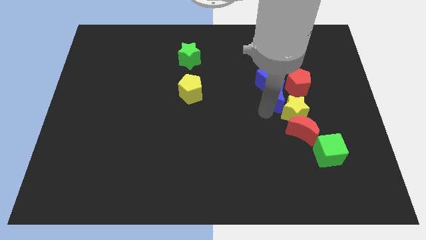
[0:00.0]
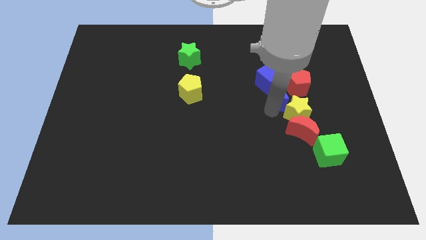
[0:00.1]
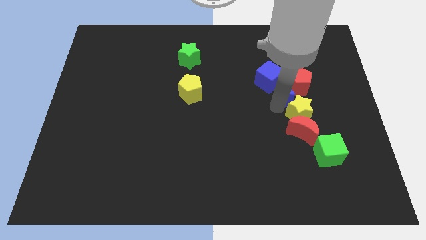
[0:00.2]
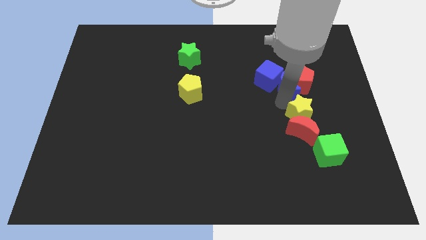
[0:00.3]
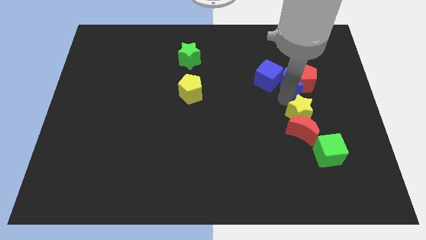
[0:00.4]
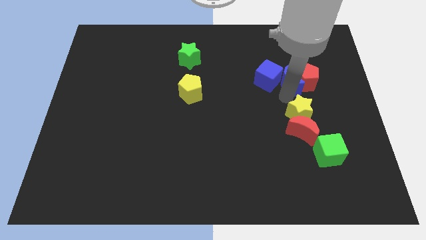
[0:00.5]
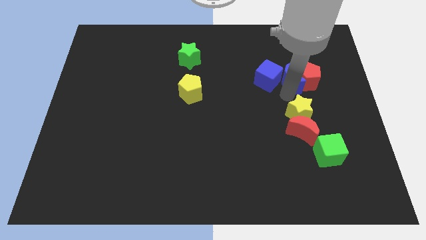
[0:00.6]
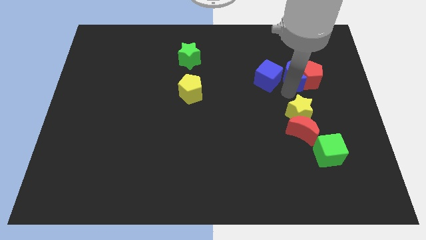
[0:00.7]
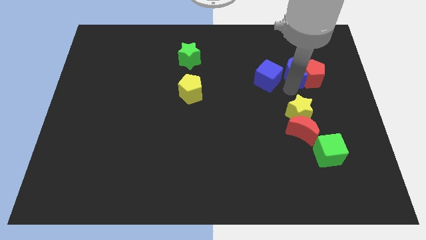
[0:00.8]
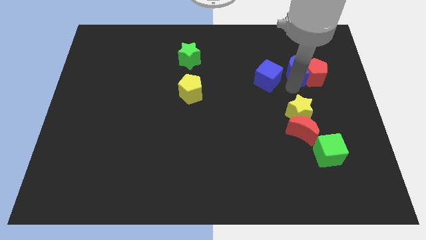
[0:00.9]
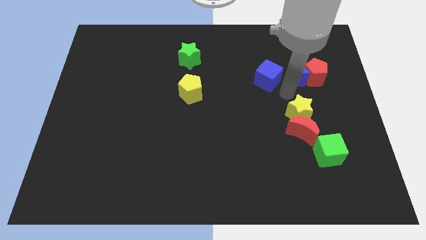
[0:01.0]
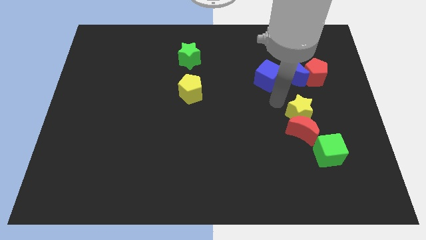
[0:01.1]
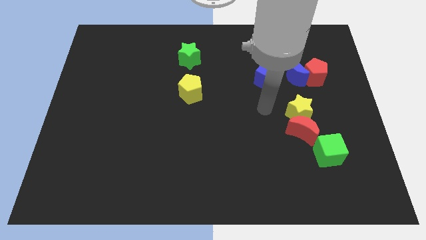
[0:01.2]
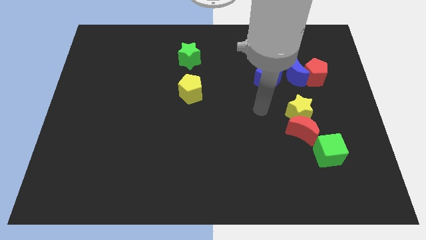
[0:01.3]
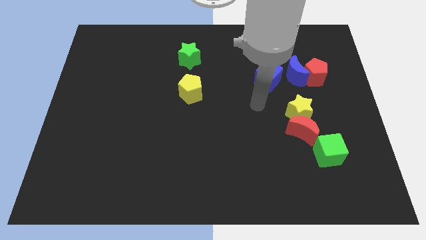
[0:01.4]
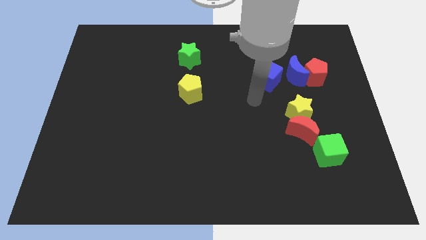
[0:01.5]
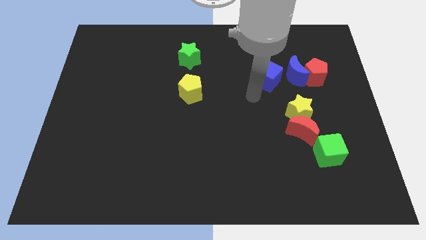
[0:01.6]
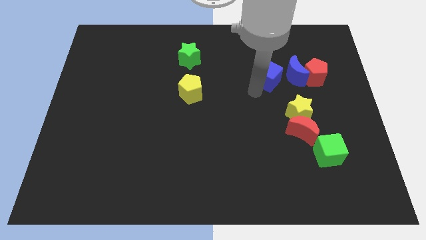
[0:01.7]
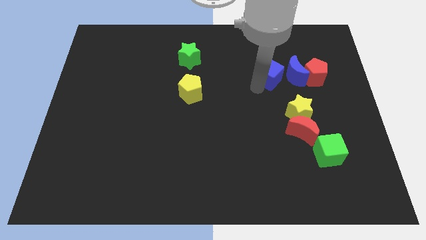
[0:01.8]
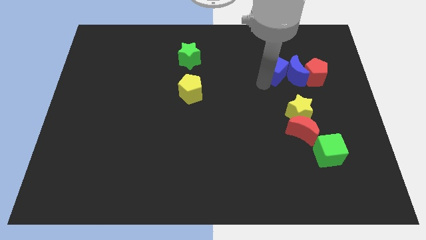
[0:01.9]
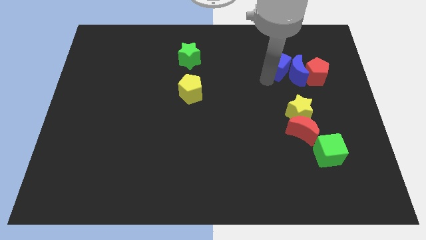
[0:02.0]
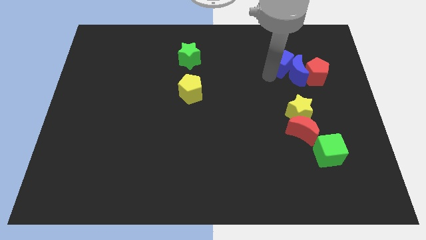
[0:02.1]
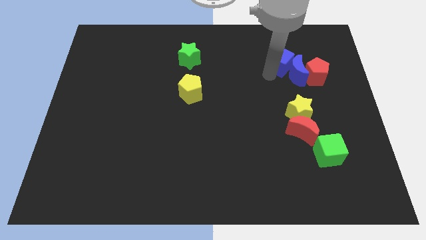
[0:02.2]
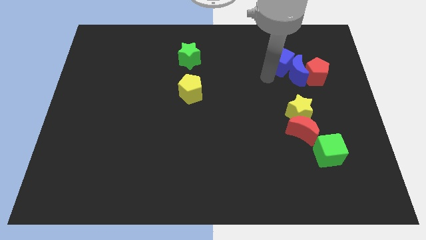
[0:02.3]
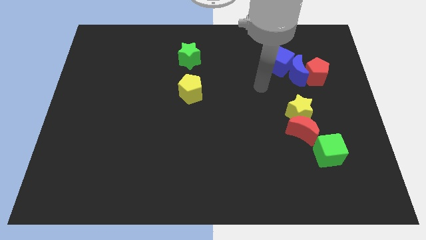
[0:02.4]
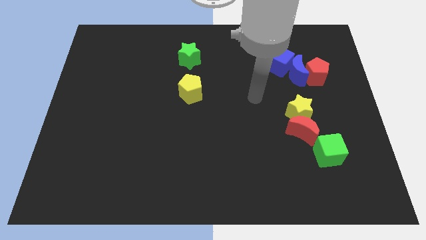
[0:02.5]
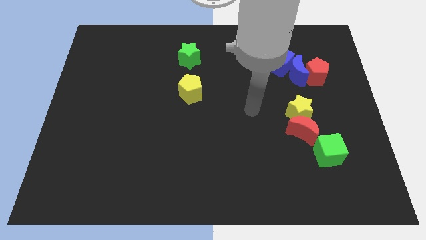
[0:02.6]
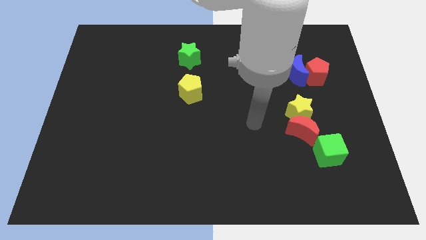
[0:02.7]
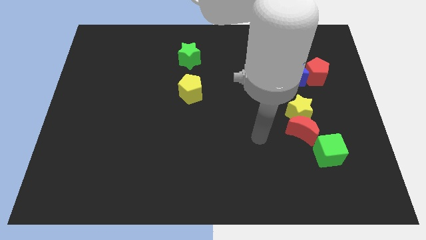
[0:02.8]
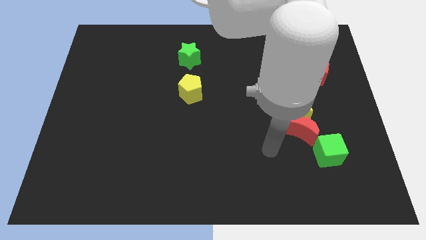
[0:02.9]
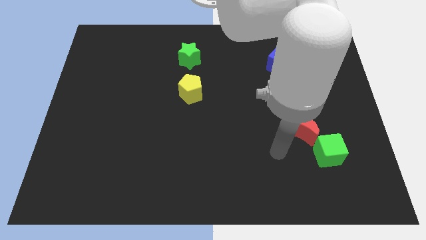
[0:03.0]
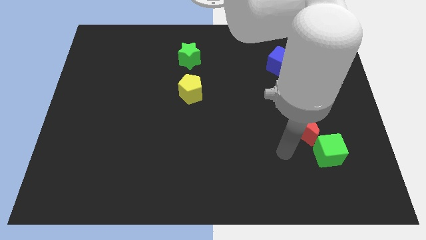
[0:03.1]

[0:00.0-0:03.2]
put the blue blocks left to the red pentgaon

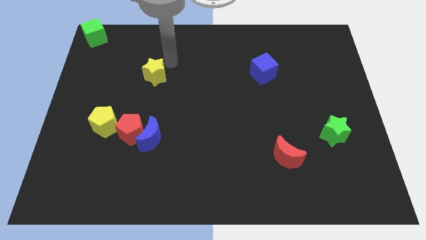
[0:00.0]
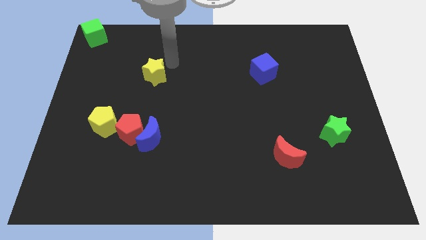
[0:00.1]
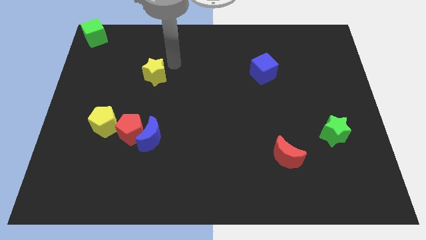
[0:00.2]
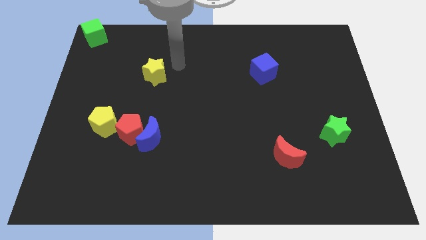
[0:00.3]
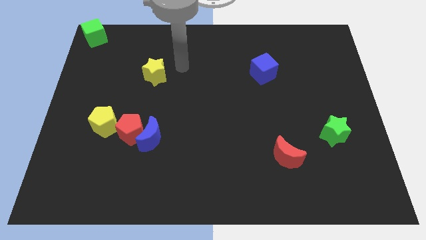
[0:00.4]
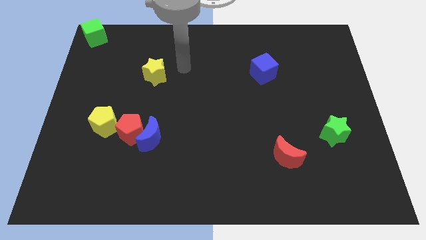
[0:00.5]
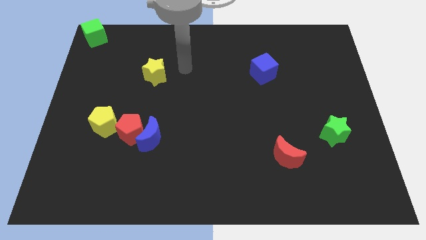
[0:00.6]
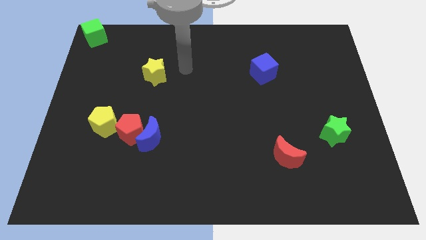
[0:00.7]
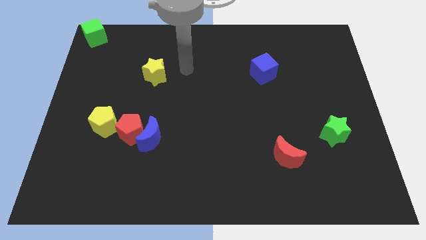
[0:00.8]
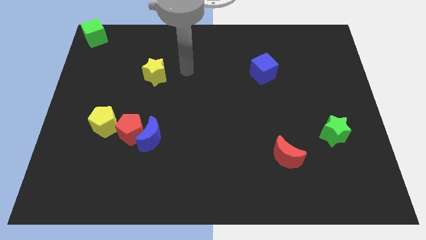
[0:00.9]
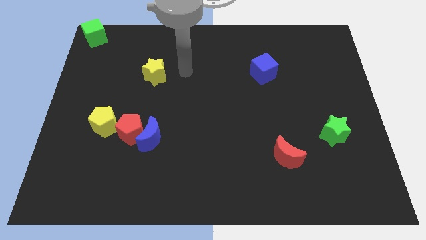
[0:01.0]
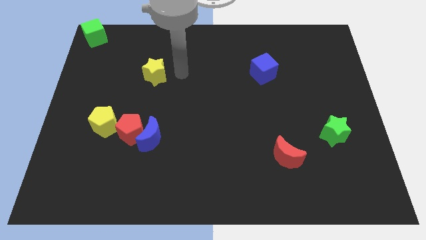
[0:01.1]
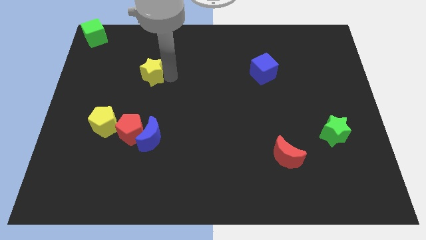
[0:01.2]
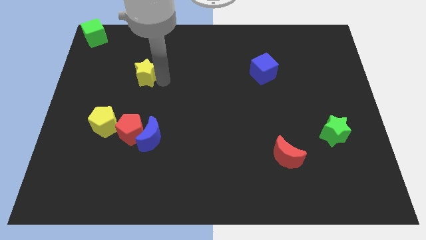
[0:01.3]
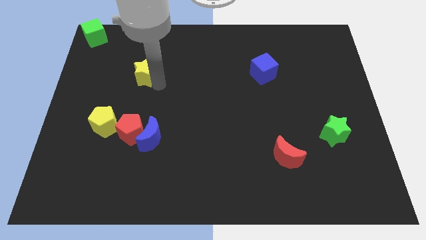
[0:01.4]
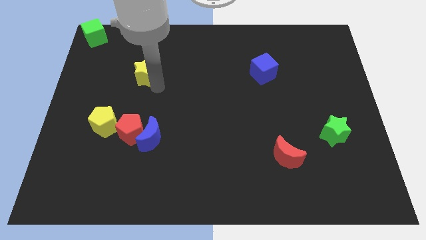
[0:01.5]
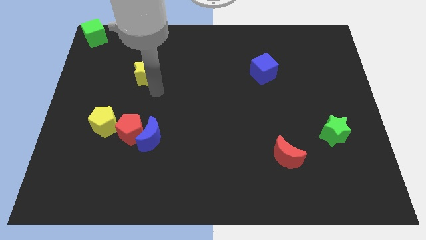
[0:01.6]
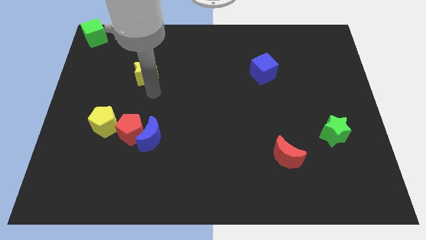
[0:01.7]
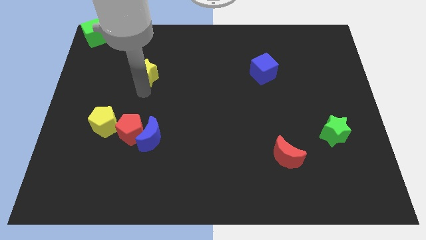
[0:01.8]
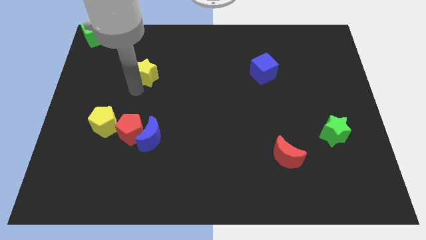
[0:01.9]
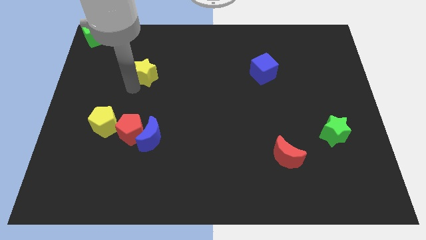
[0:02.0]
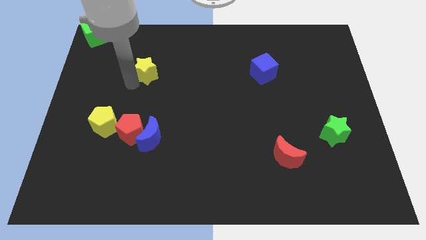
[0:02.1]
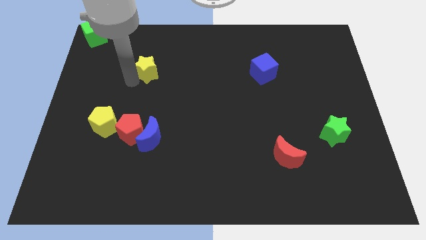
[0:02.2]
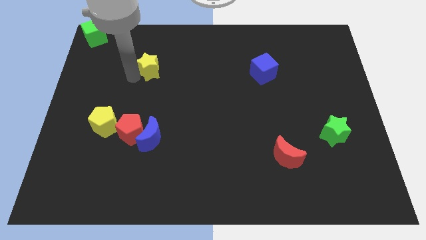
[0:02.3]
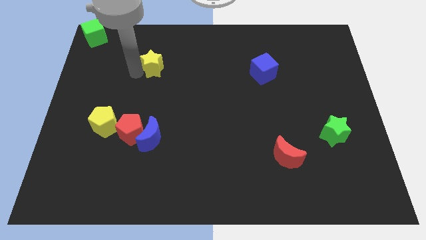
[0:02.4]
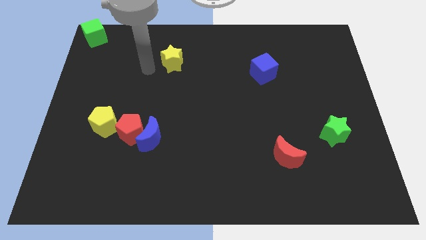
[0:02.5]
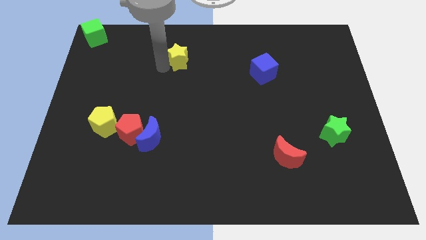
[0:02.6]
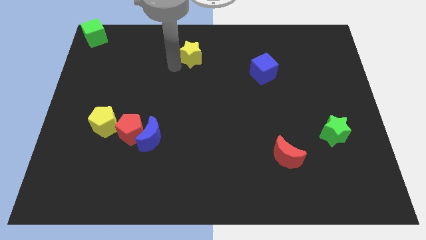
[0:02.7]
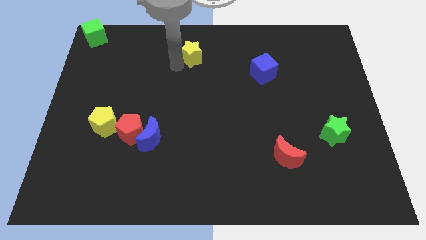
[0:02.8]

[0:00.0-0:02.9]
move the yellow star slightly towards the center of the board

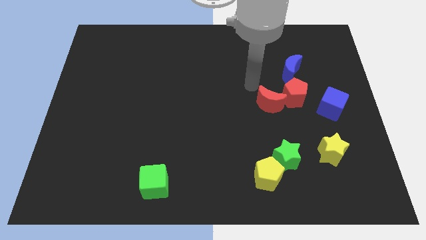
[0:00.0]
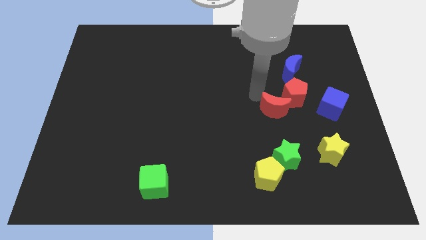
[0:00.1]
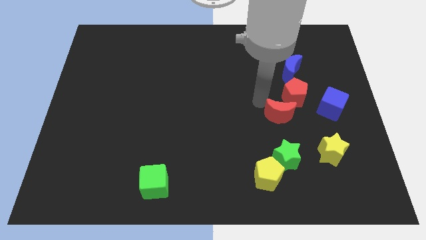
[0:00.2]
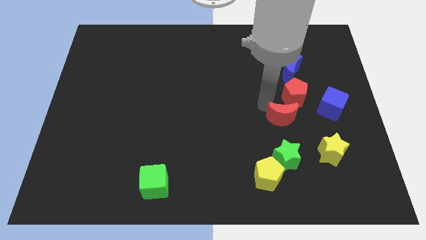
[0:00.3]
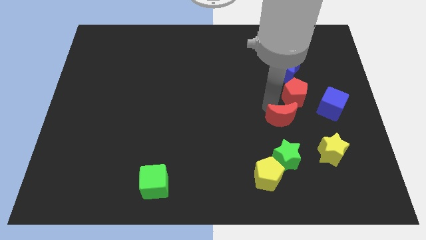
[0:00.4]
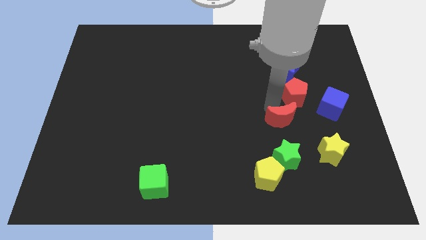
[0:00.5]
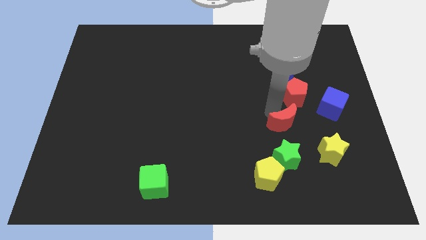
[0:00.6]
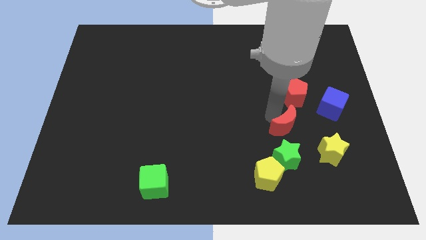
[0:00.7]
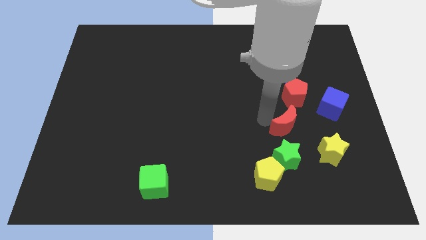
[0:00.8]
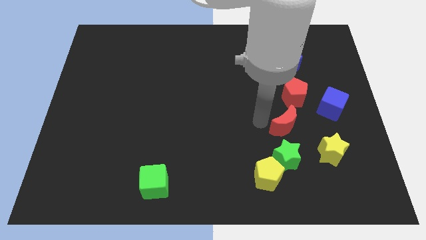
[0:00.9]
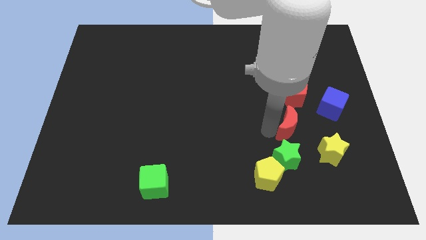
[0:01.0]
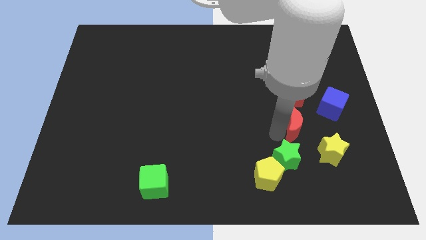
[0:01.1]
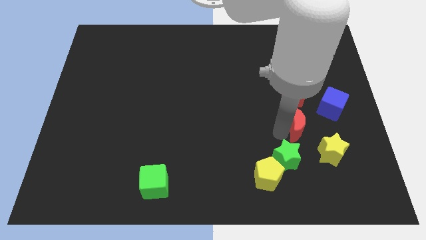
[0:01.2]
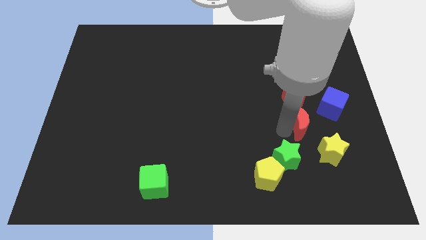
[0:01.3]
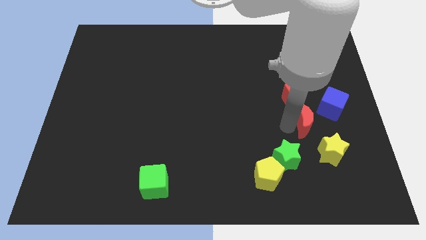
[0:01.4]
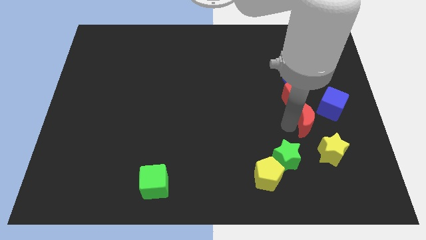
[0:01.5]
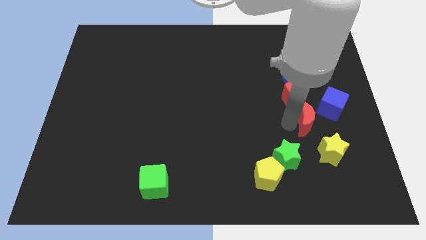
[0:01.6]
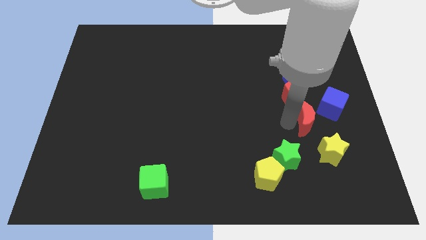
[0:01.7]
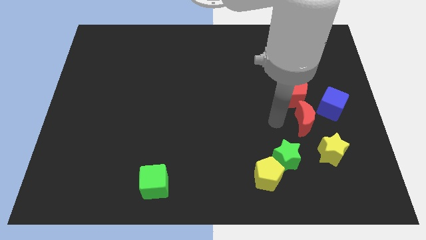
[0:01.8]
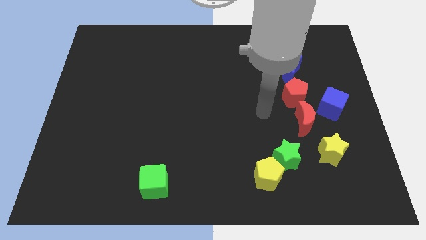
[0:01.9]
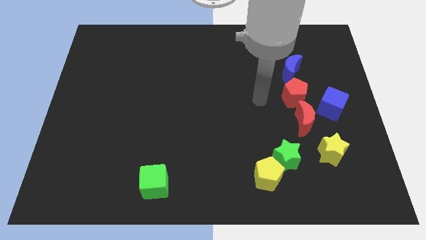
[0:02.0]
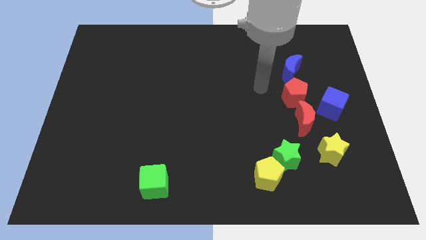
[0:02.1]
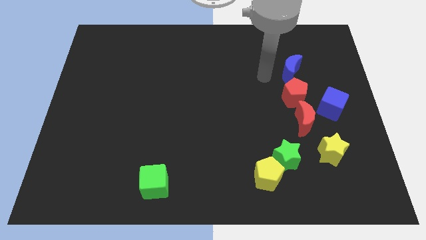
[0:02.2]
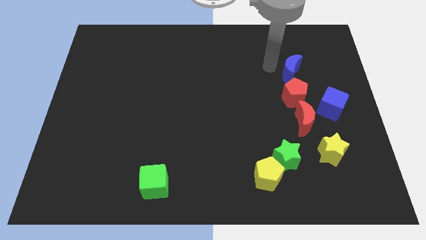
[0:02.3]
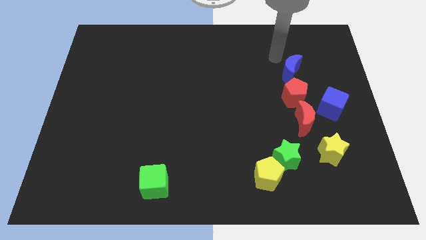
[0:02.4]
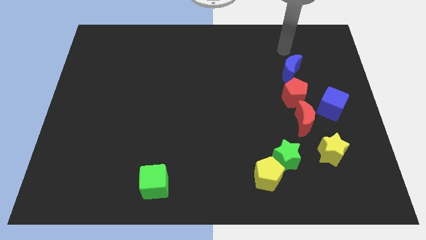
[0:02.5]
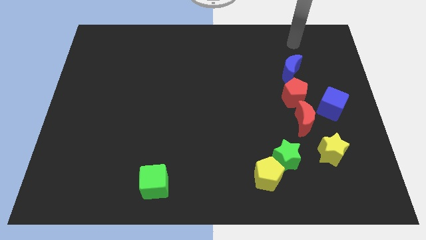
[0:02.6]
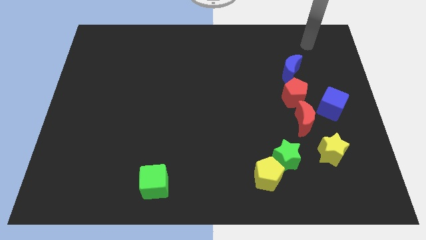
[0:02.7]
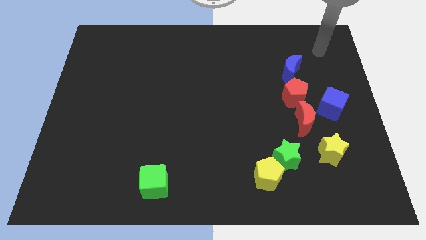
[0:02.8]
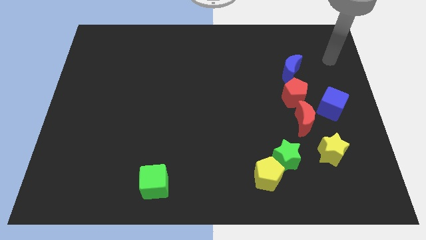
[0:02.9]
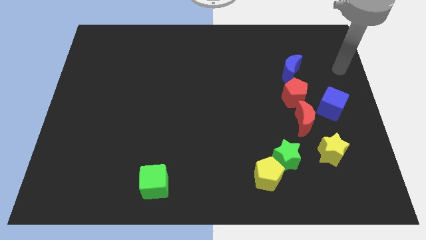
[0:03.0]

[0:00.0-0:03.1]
put the red crescent at the bottom of the red pentagon
